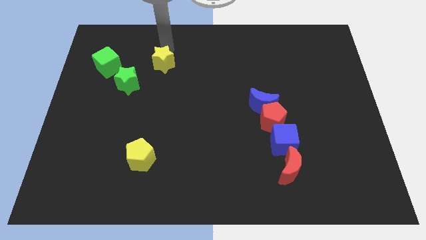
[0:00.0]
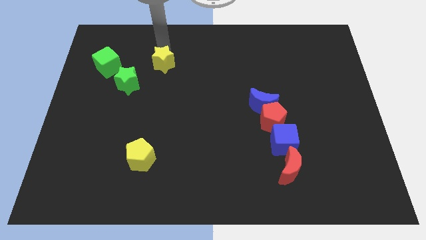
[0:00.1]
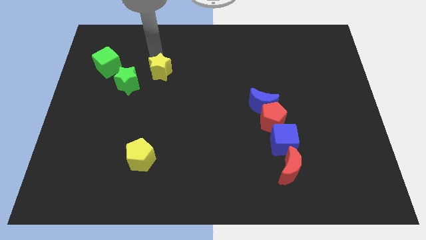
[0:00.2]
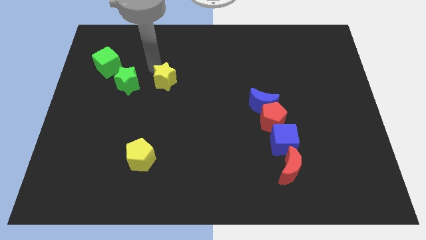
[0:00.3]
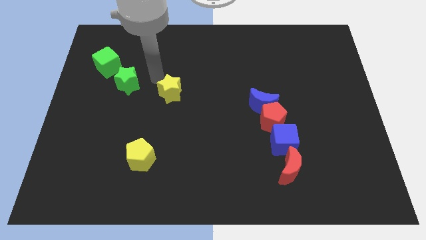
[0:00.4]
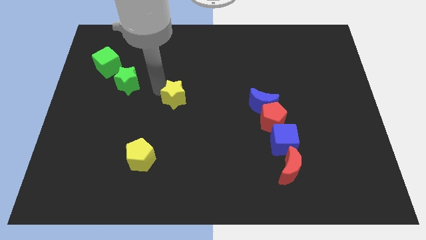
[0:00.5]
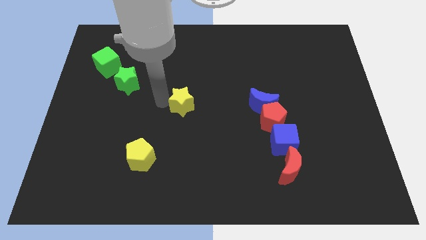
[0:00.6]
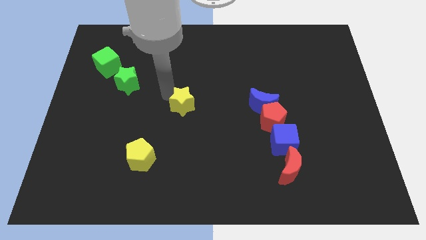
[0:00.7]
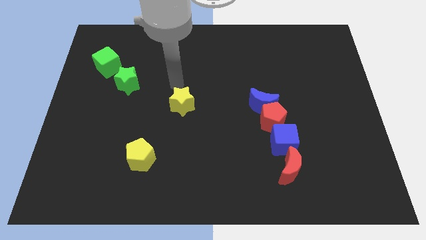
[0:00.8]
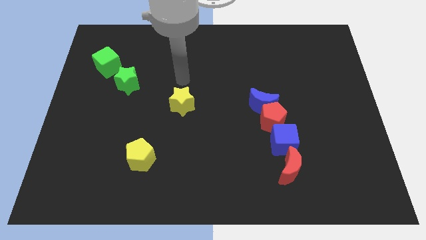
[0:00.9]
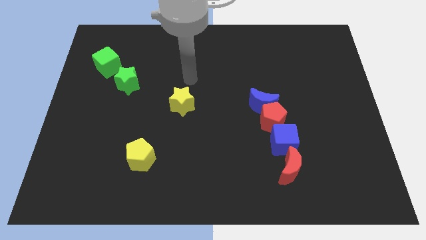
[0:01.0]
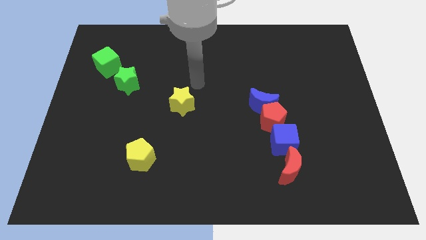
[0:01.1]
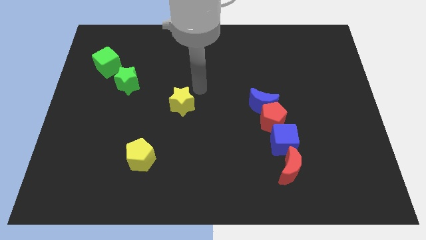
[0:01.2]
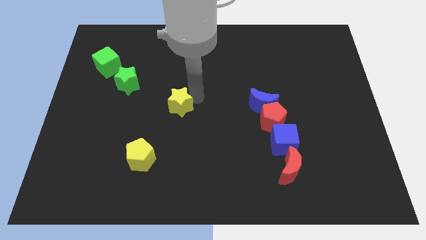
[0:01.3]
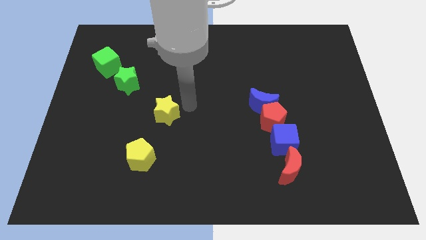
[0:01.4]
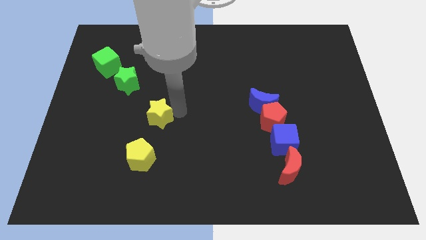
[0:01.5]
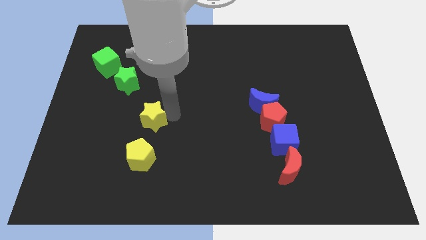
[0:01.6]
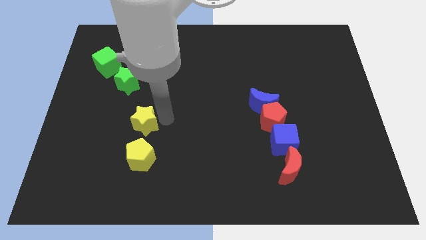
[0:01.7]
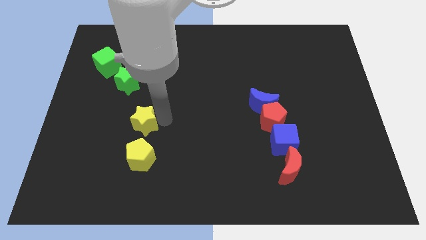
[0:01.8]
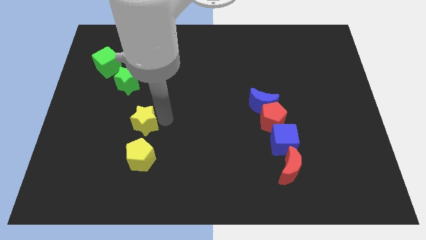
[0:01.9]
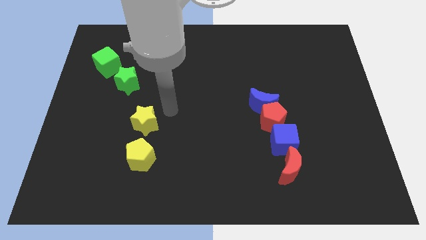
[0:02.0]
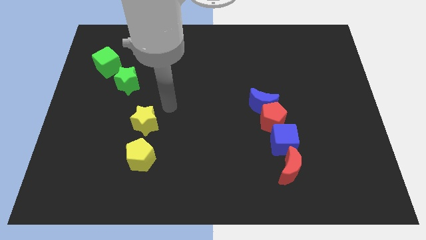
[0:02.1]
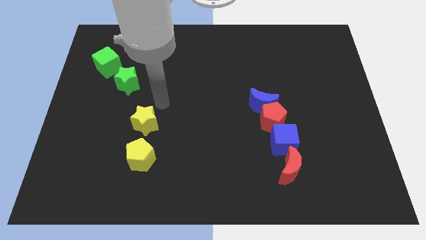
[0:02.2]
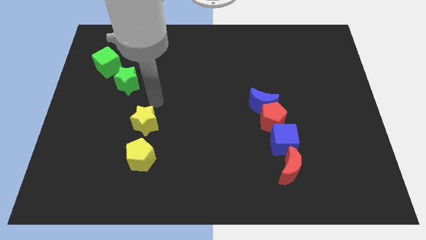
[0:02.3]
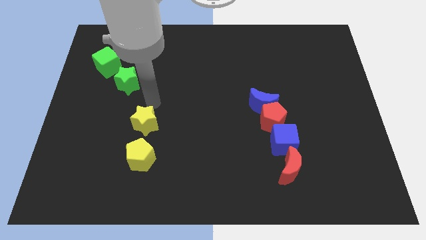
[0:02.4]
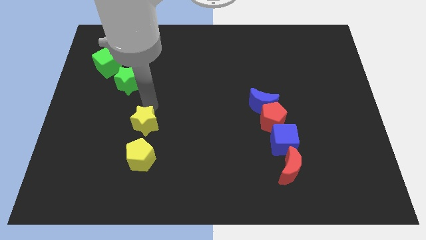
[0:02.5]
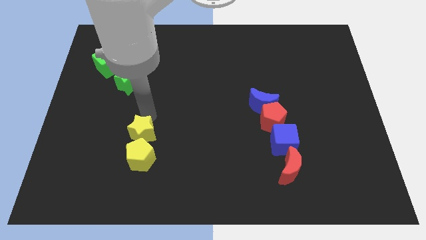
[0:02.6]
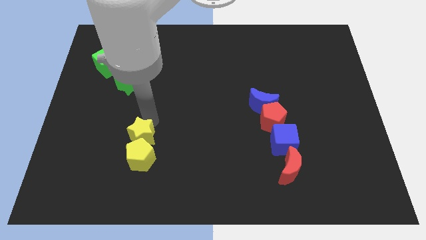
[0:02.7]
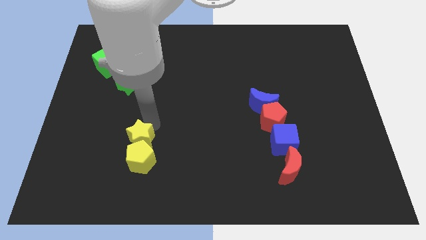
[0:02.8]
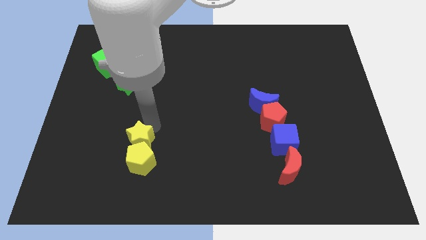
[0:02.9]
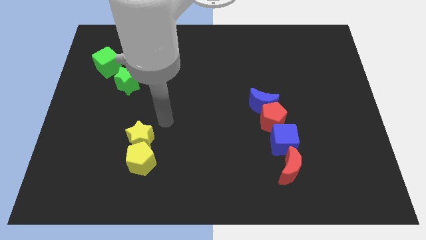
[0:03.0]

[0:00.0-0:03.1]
push the yellow star into the yellow pentagon

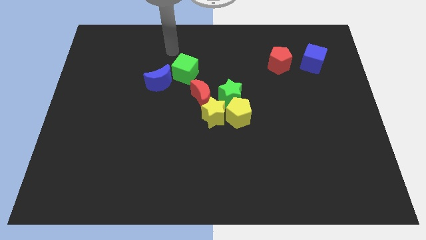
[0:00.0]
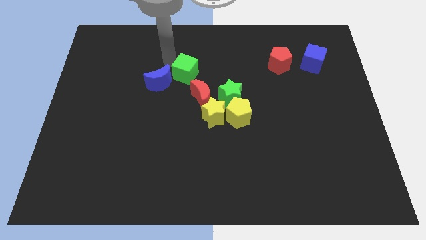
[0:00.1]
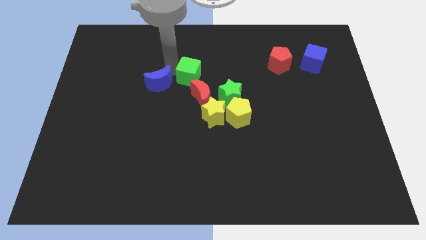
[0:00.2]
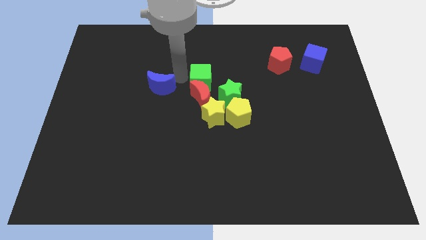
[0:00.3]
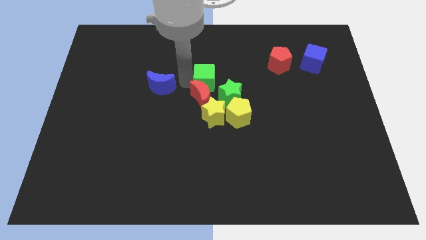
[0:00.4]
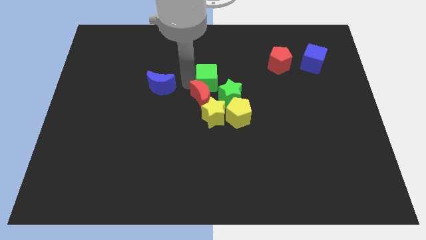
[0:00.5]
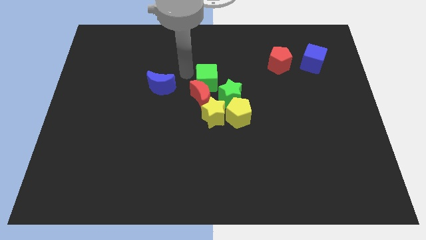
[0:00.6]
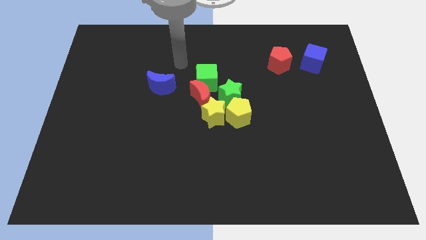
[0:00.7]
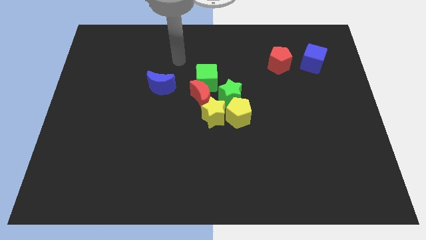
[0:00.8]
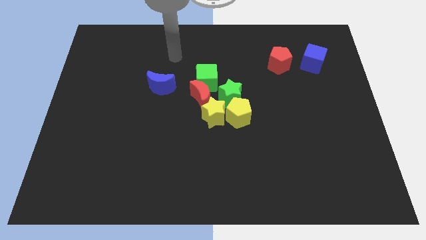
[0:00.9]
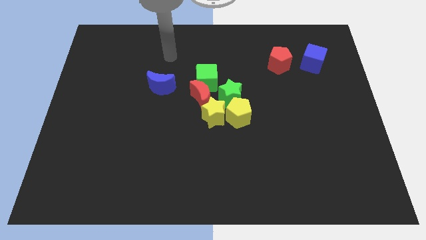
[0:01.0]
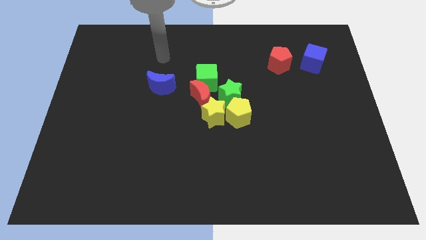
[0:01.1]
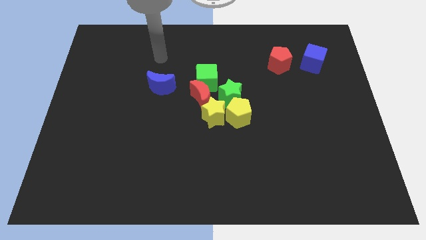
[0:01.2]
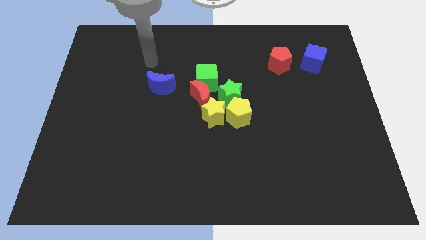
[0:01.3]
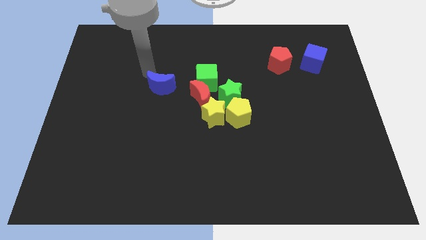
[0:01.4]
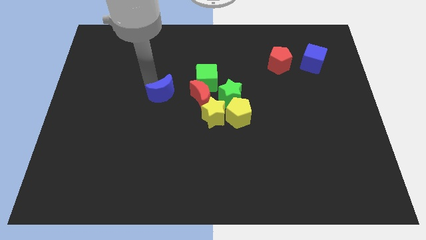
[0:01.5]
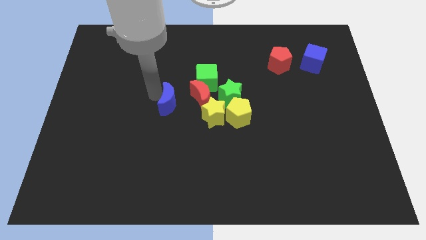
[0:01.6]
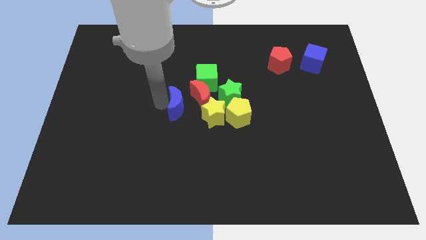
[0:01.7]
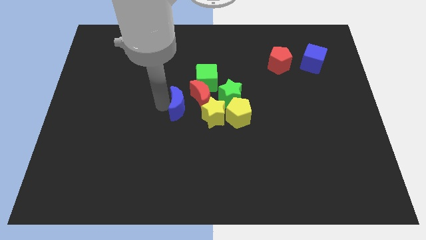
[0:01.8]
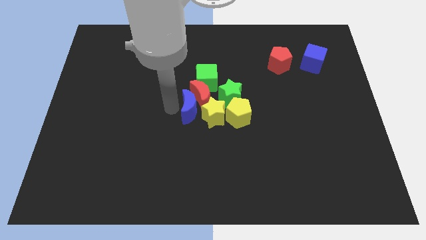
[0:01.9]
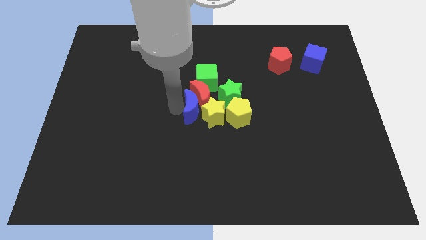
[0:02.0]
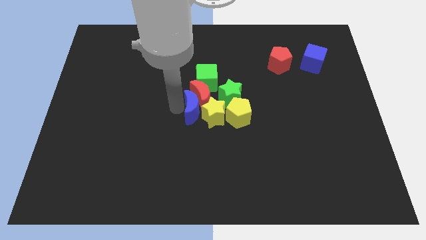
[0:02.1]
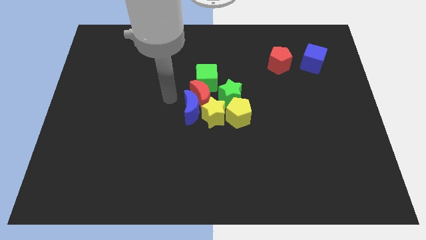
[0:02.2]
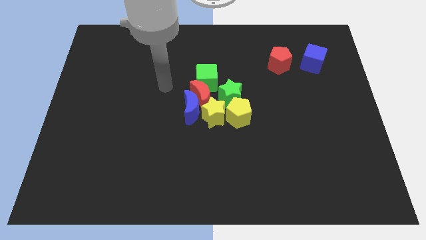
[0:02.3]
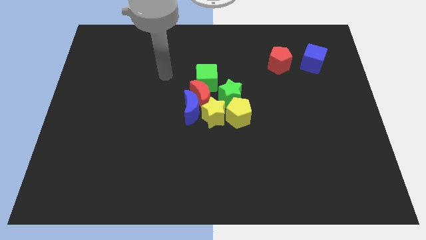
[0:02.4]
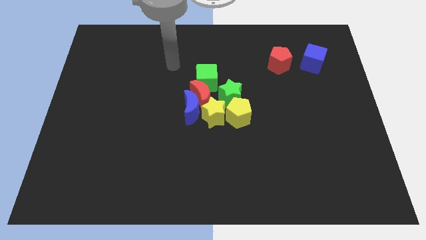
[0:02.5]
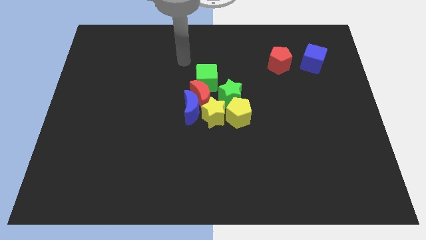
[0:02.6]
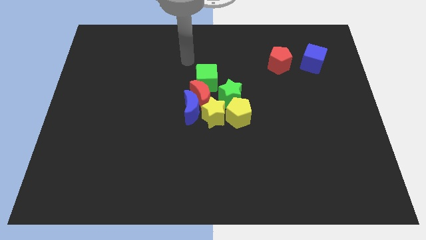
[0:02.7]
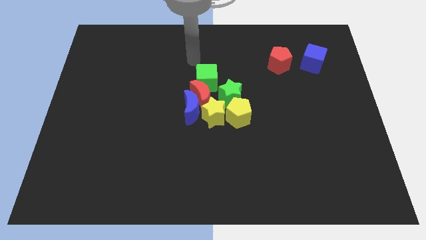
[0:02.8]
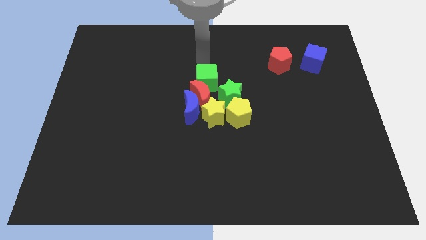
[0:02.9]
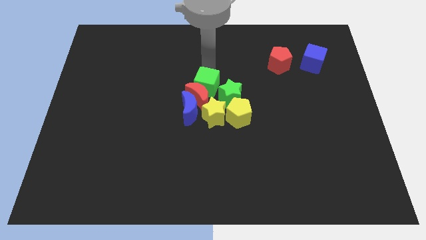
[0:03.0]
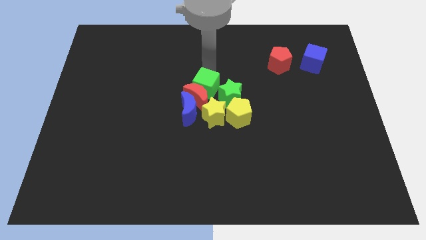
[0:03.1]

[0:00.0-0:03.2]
place the green cube and blue moon on either sides of the red crescent

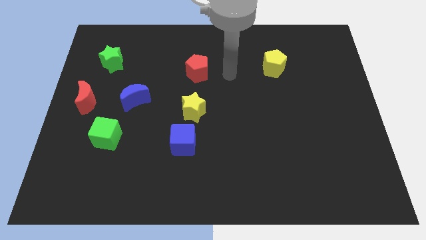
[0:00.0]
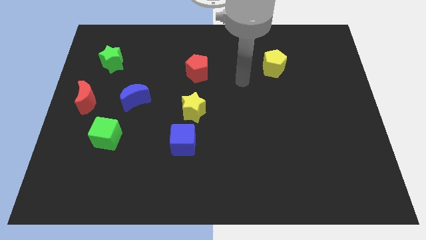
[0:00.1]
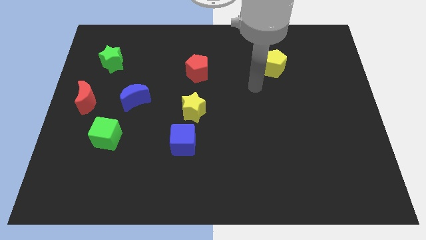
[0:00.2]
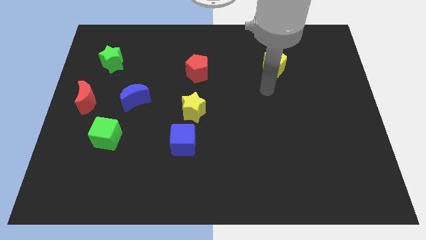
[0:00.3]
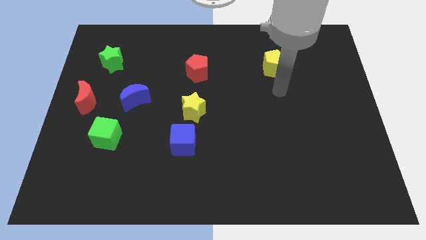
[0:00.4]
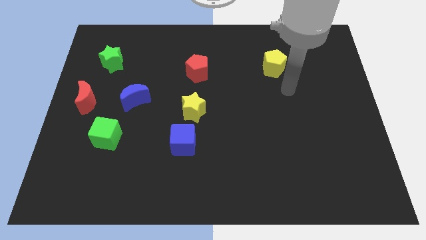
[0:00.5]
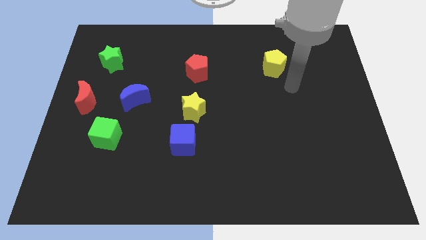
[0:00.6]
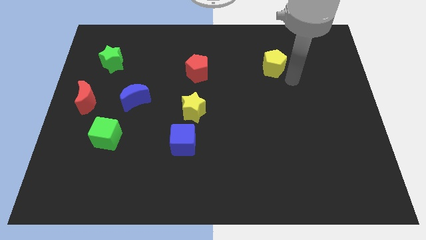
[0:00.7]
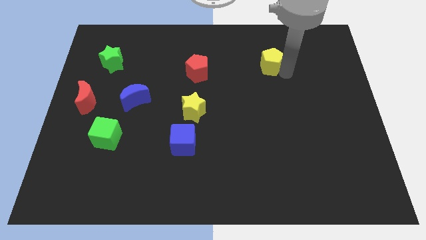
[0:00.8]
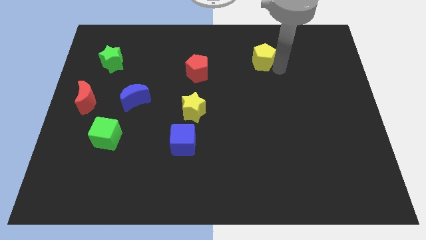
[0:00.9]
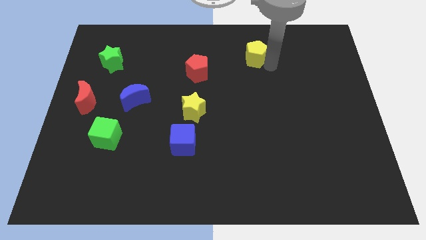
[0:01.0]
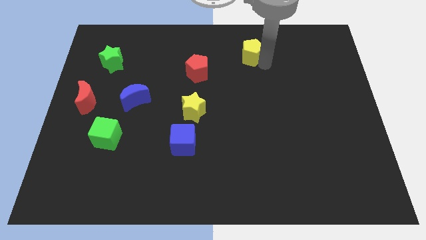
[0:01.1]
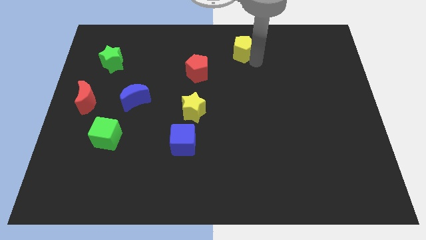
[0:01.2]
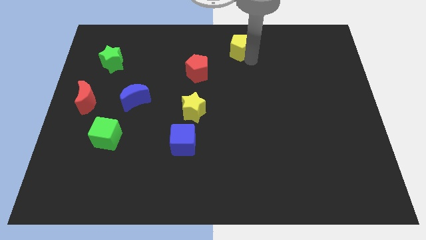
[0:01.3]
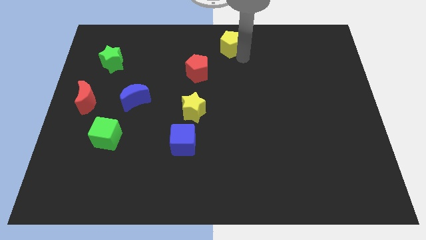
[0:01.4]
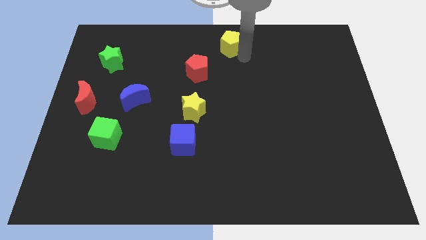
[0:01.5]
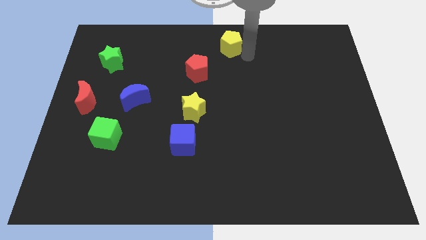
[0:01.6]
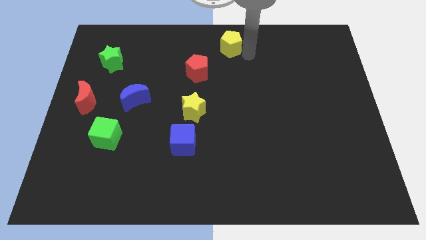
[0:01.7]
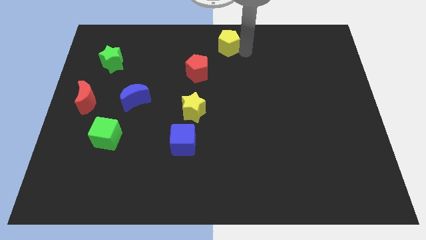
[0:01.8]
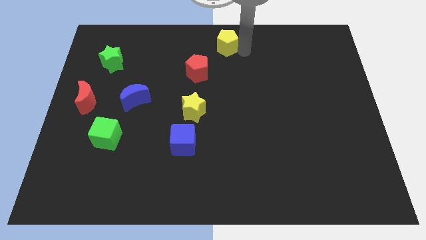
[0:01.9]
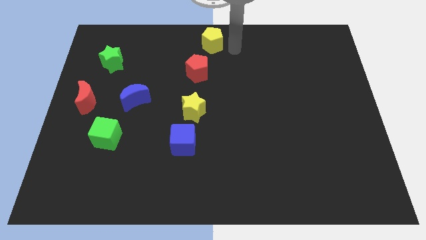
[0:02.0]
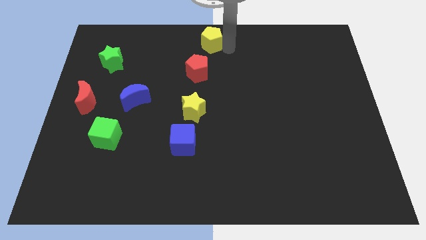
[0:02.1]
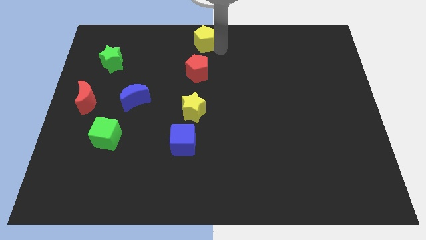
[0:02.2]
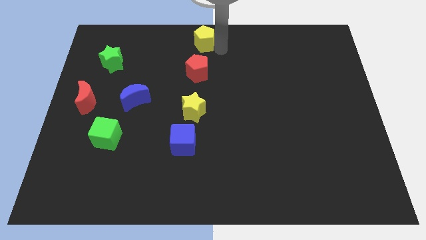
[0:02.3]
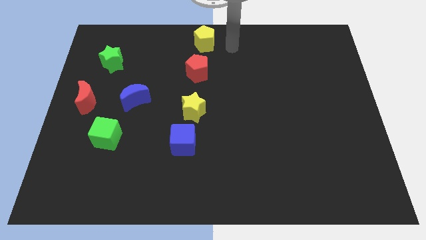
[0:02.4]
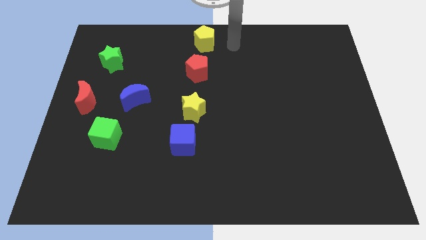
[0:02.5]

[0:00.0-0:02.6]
move the yellow pentagon towards the top centre of the board
